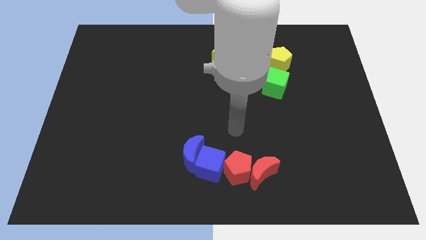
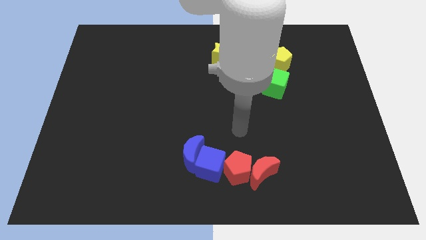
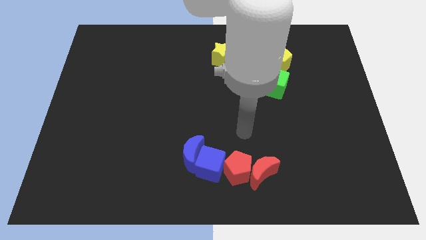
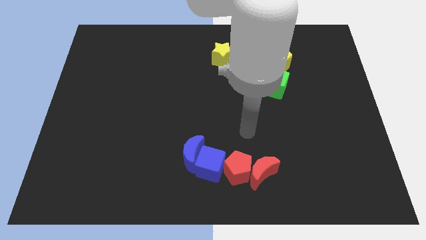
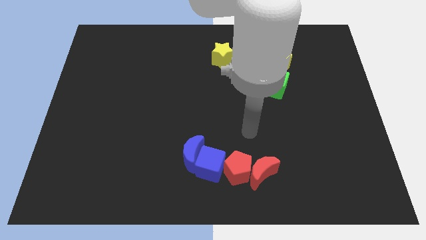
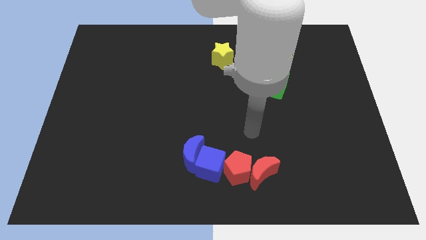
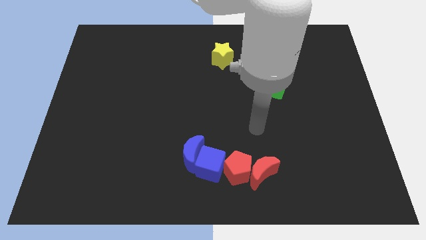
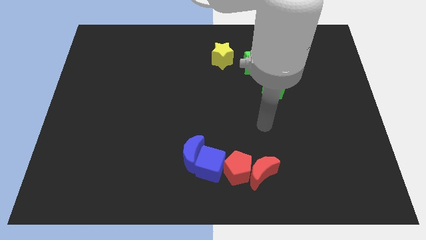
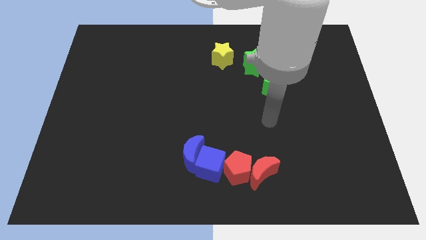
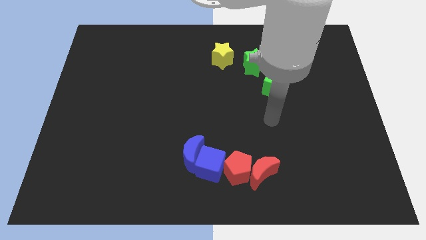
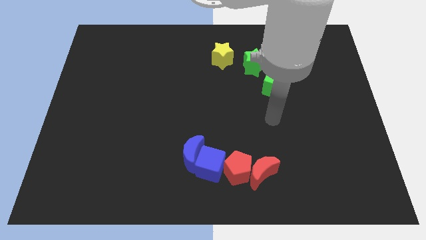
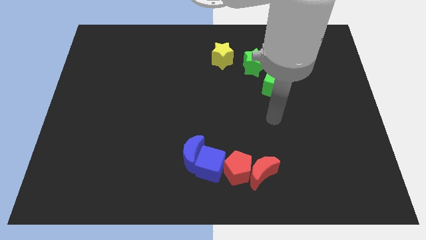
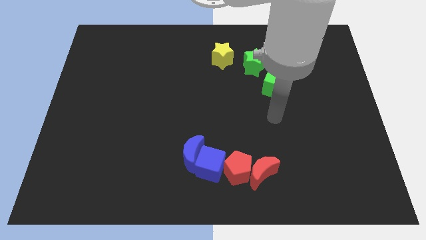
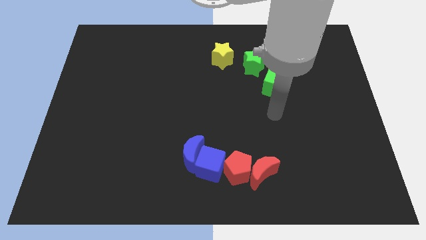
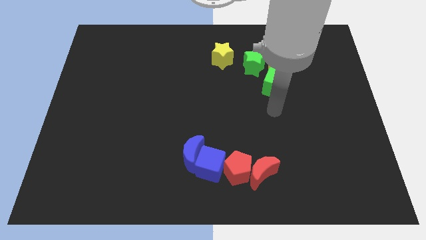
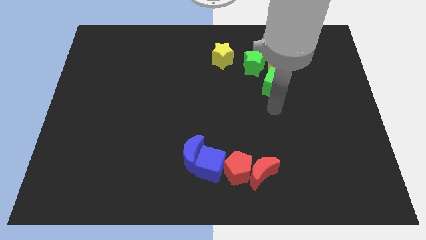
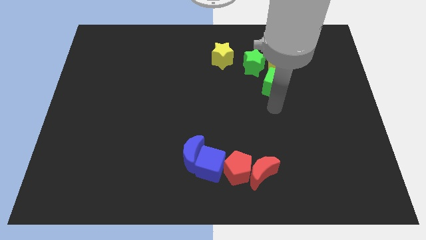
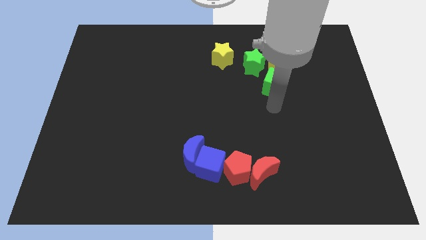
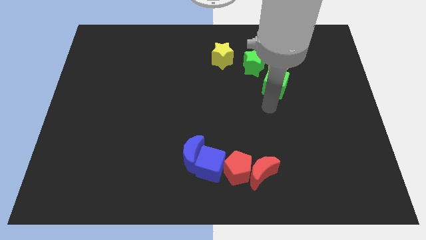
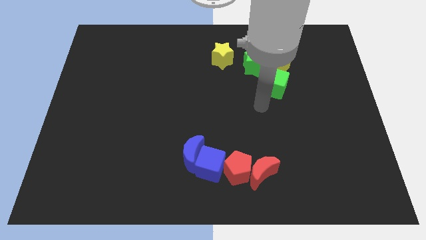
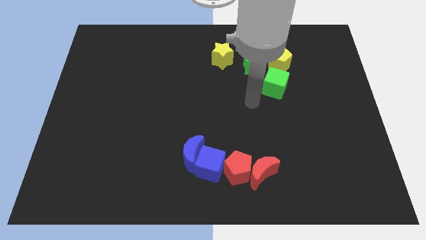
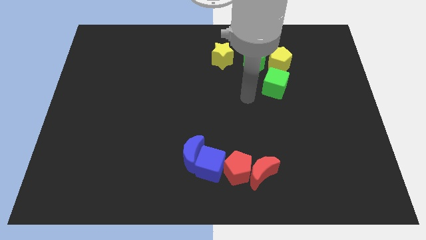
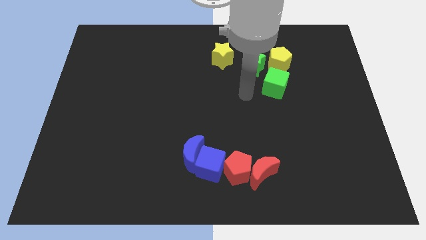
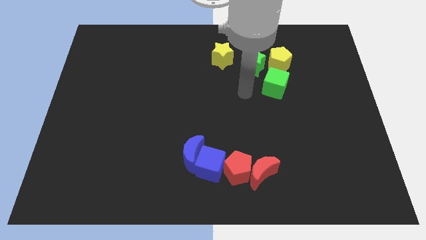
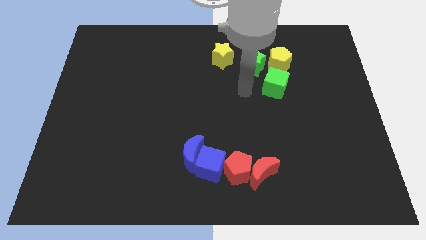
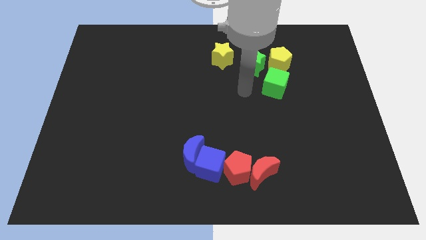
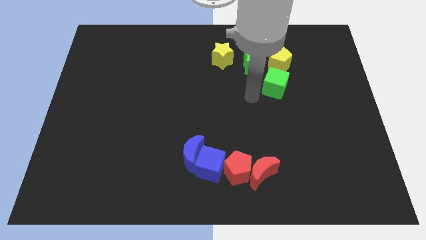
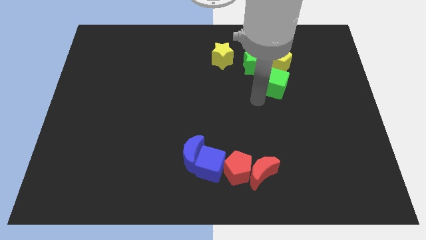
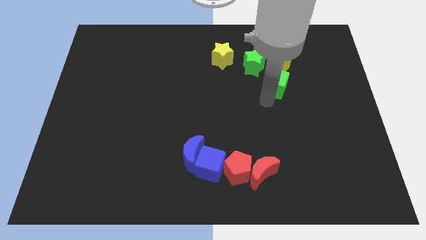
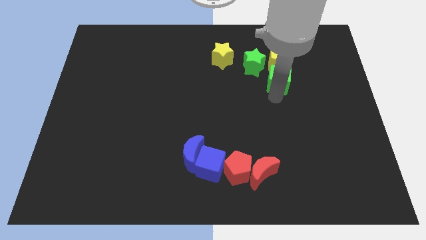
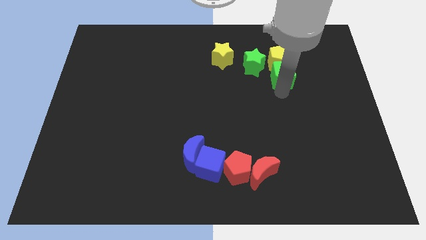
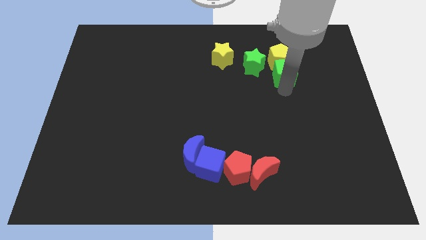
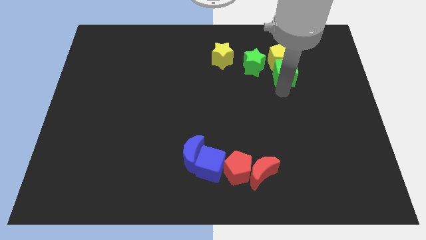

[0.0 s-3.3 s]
move the arm towards the bottom of the green cube

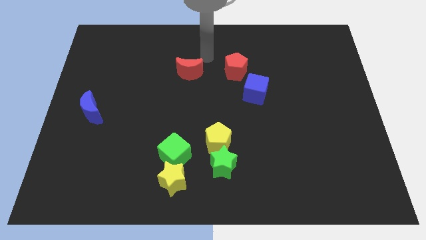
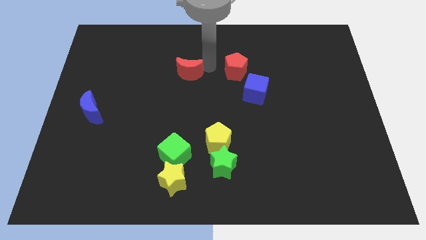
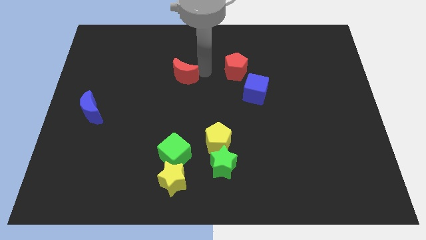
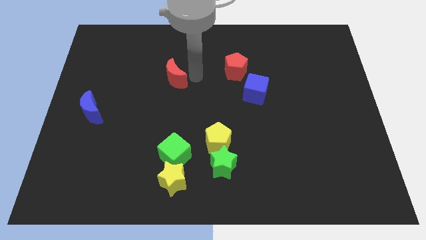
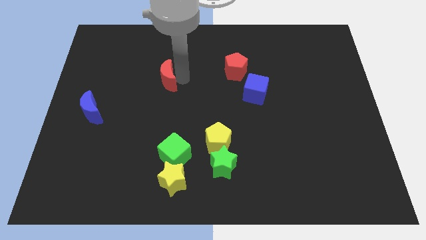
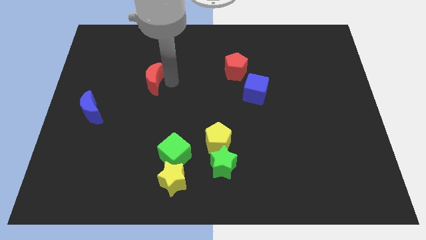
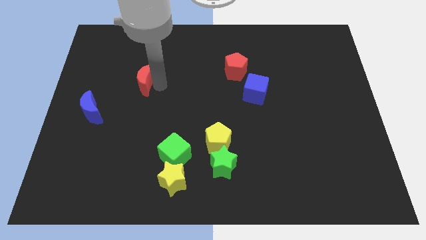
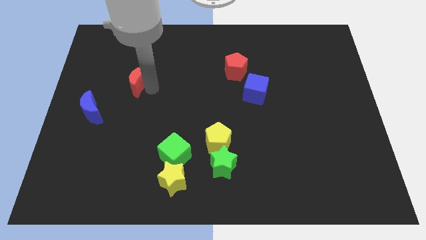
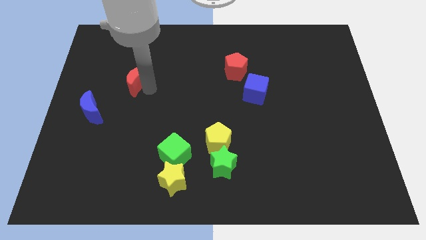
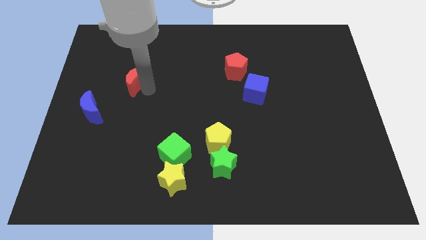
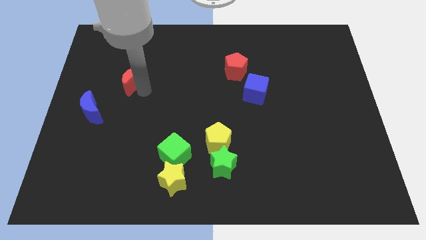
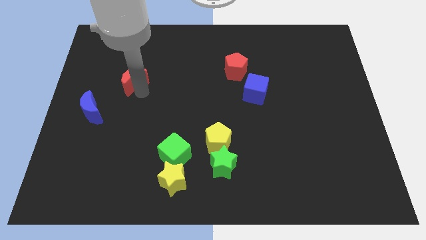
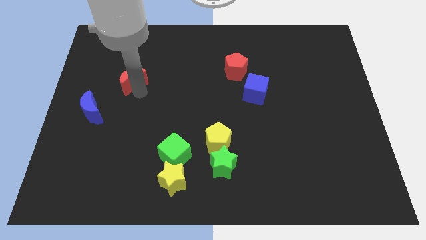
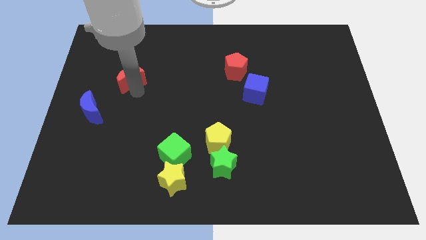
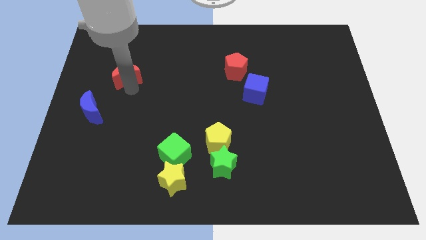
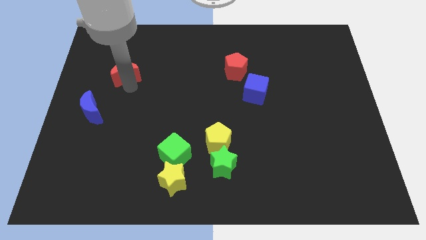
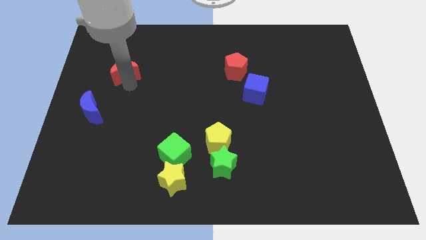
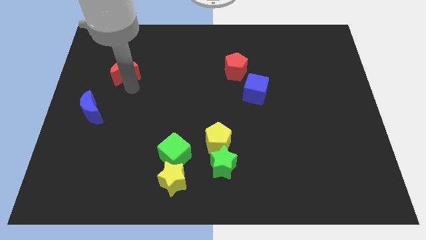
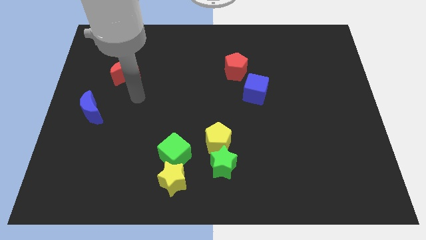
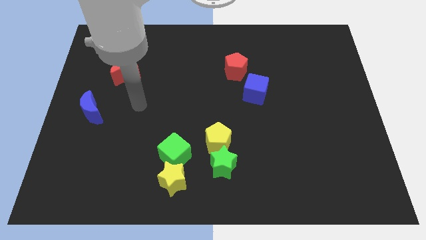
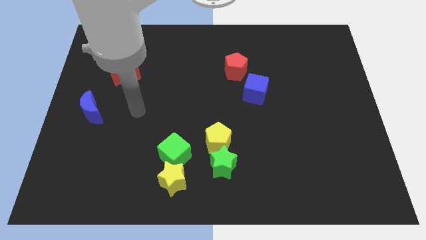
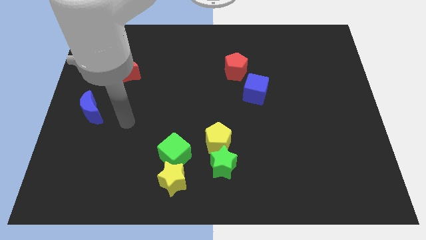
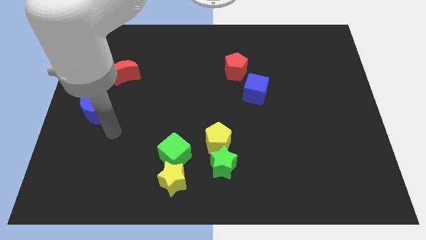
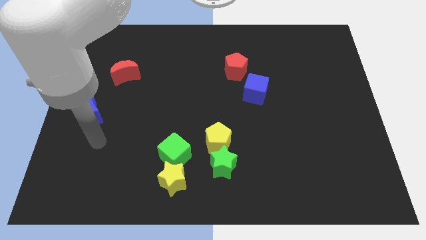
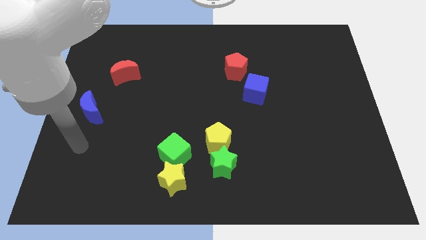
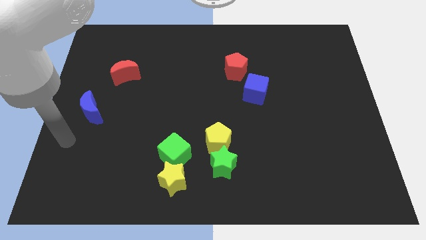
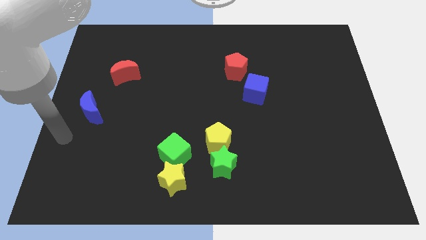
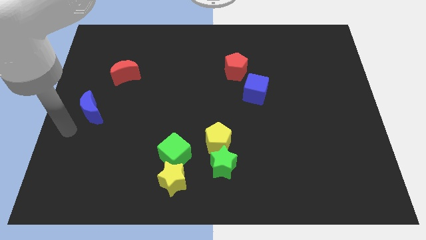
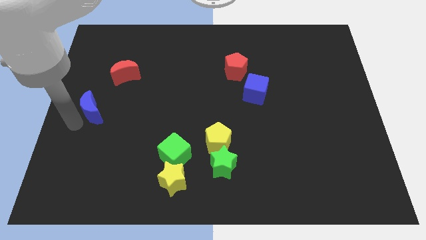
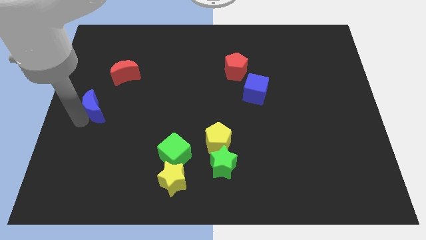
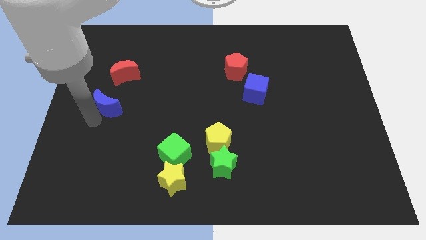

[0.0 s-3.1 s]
slightly push the red crescent towards the left of the board

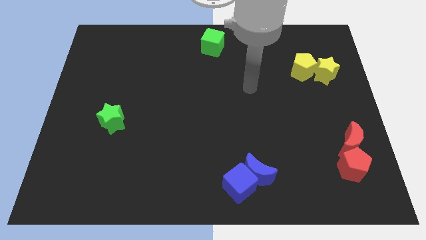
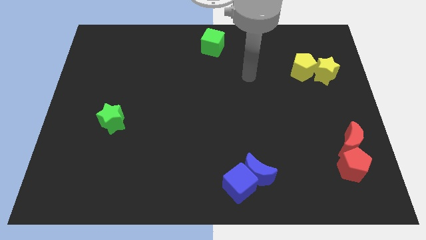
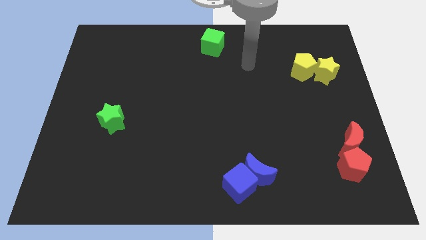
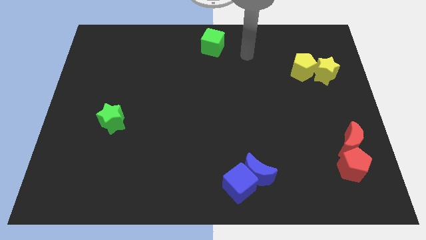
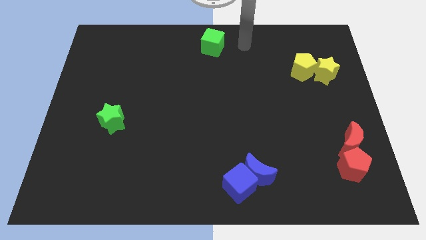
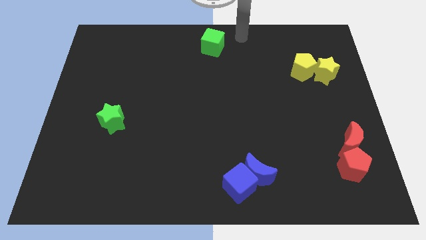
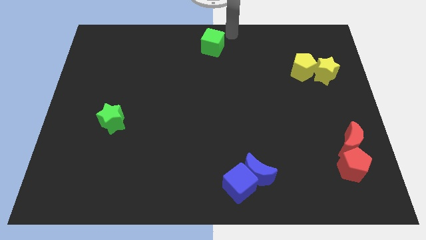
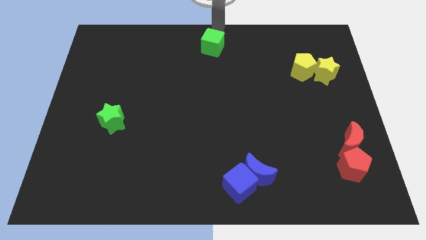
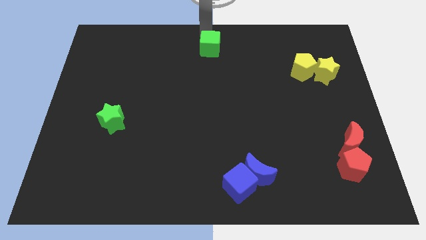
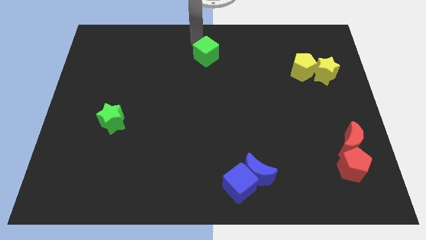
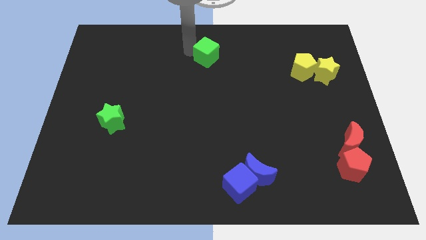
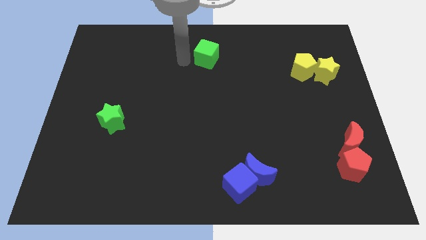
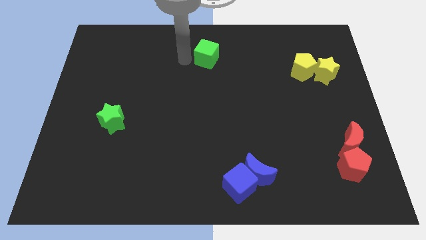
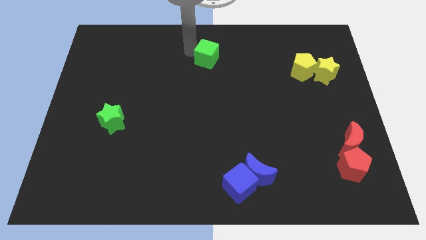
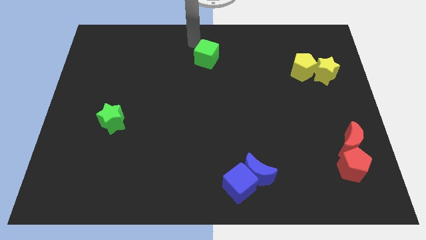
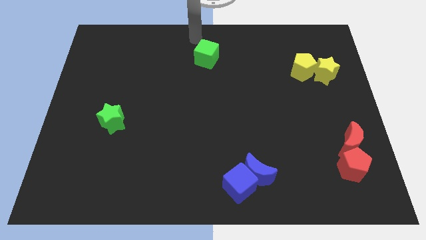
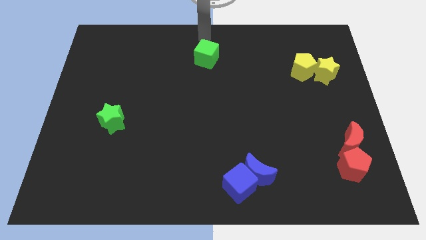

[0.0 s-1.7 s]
move the arm to the top center of the board

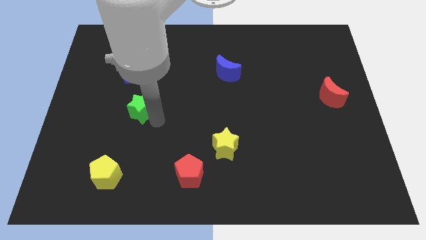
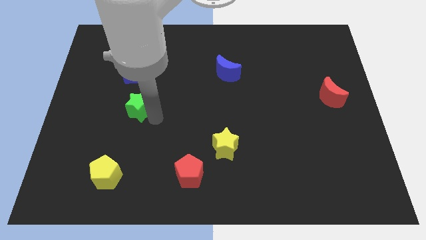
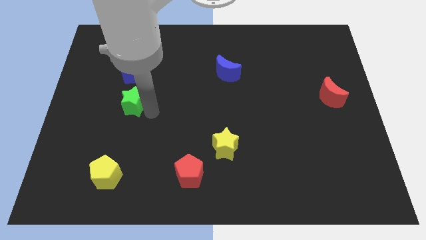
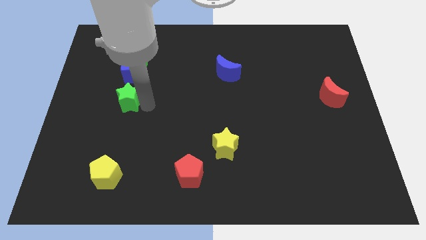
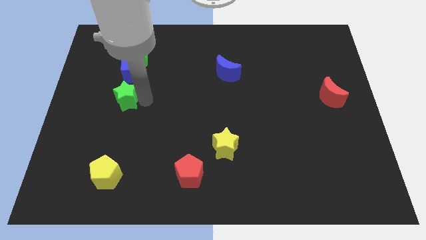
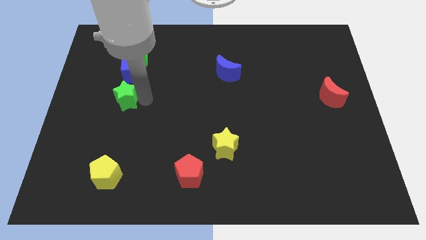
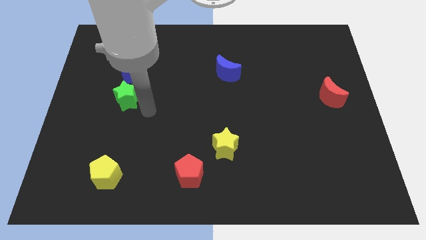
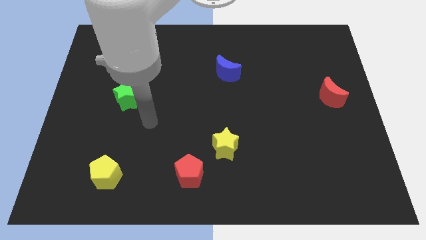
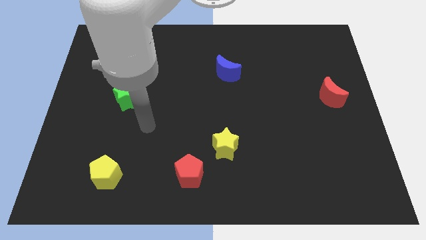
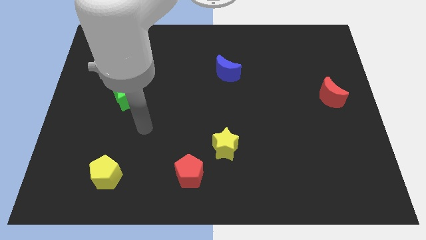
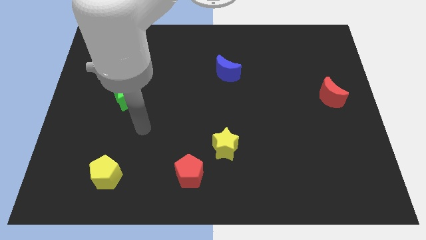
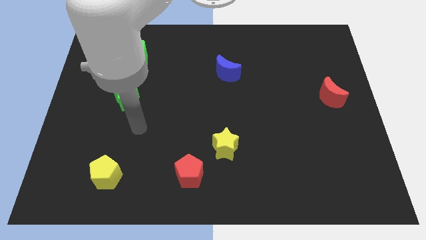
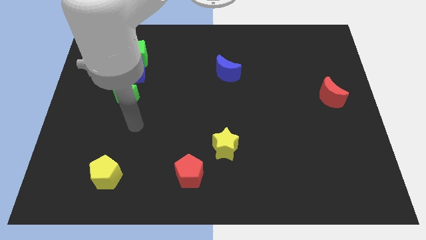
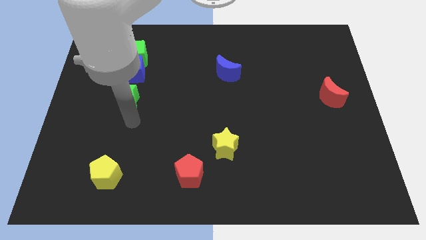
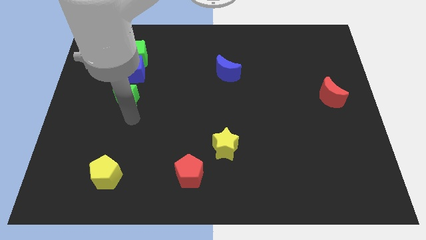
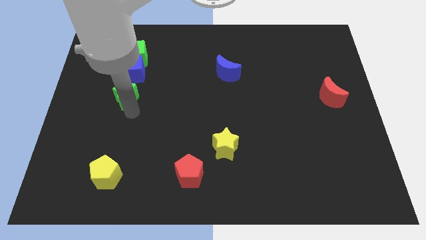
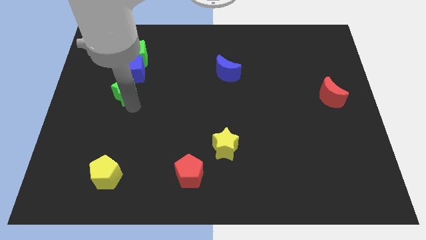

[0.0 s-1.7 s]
place the green star below the blue cube
